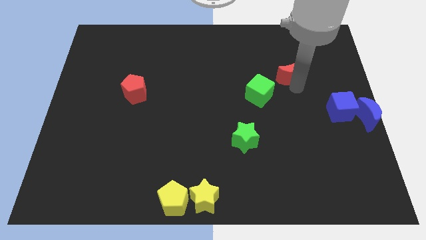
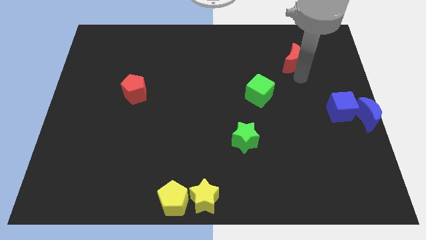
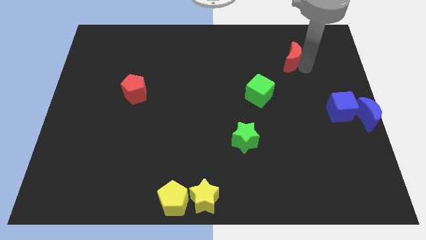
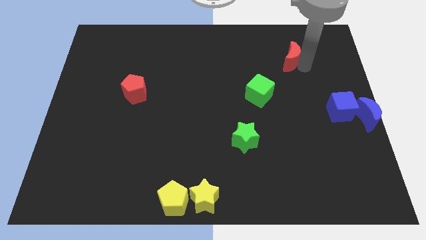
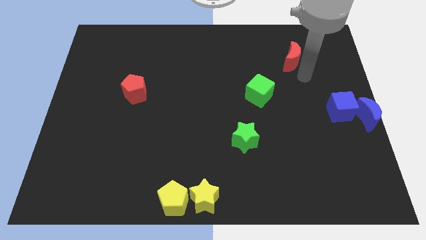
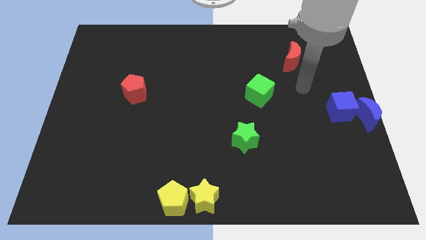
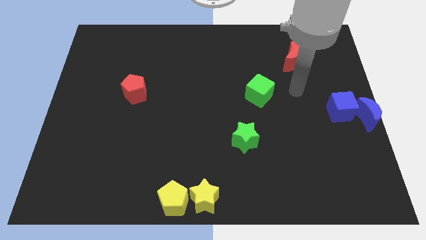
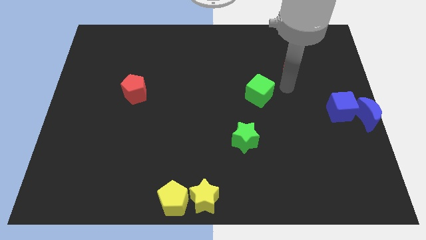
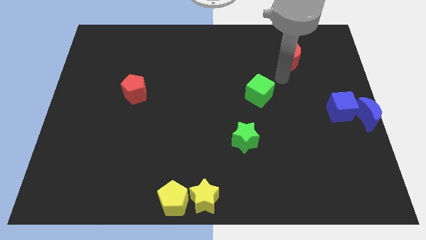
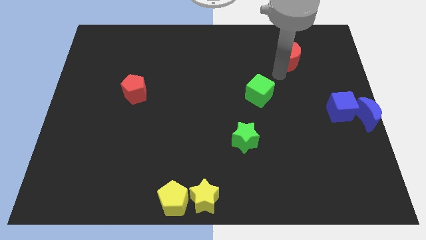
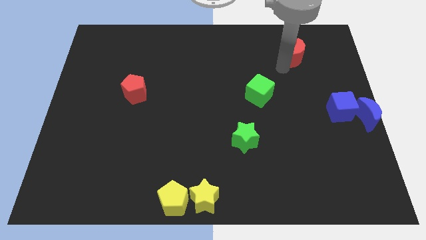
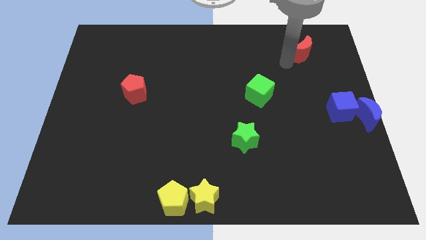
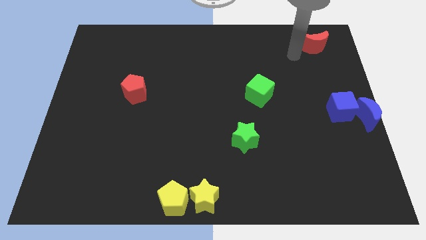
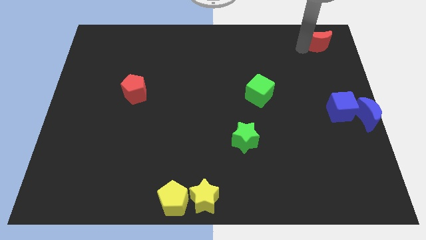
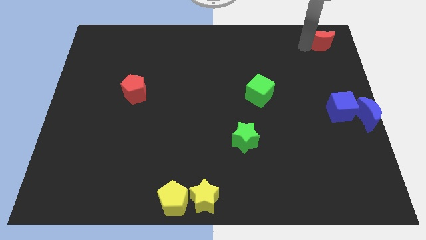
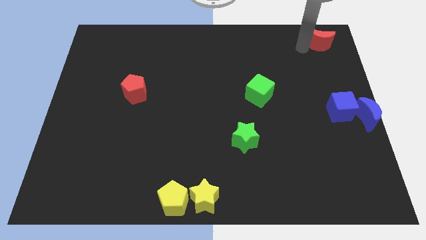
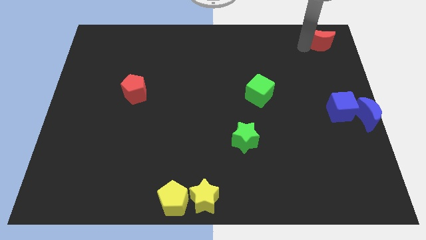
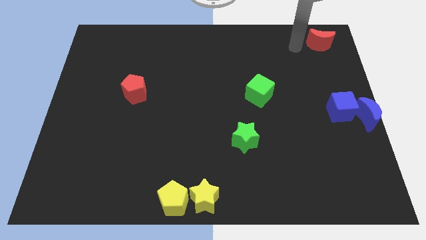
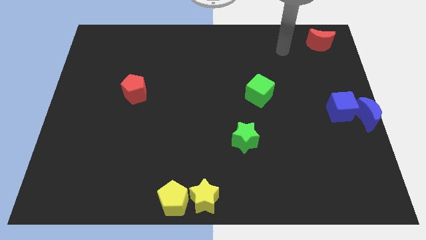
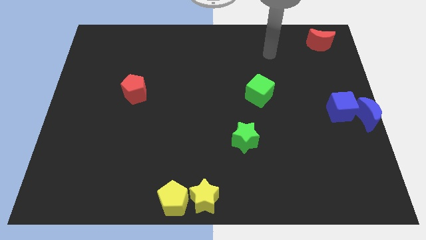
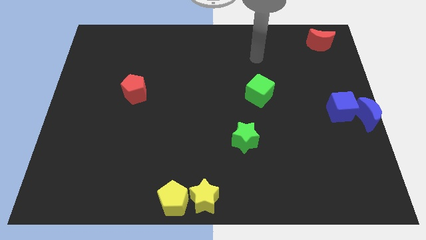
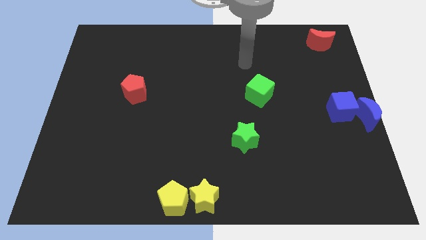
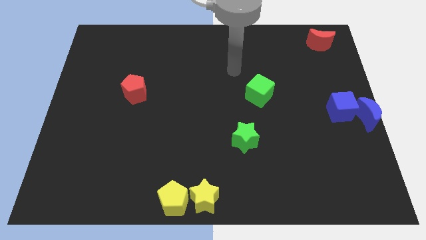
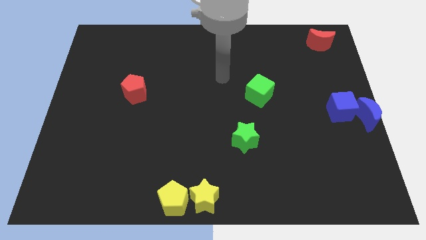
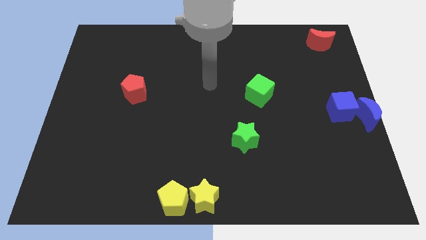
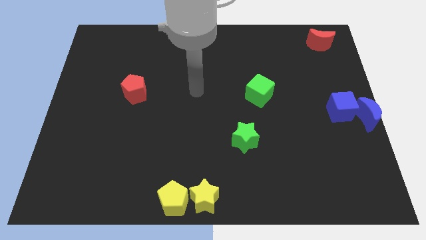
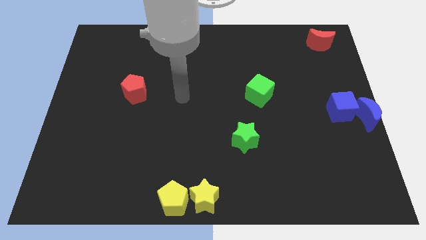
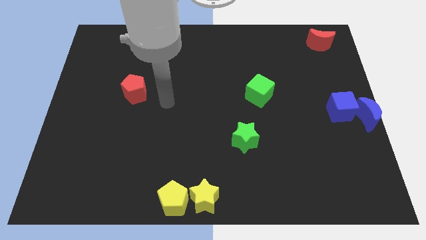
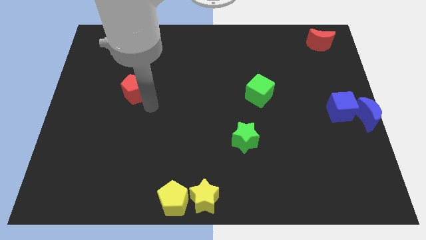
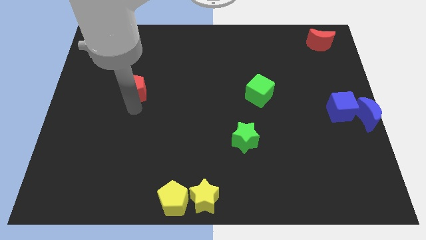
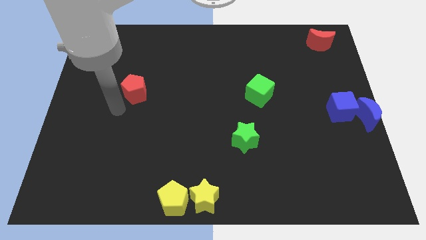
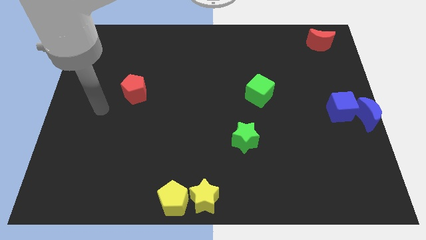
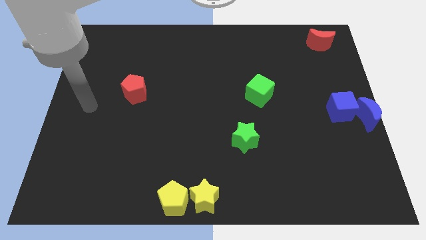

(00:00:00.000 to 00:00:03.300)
push the red crescent to the top right corner

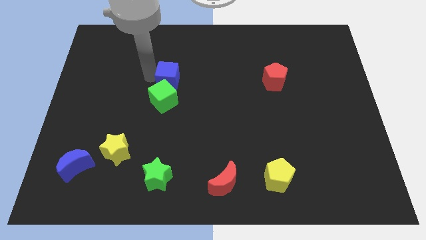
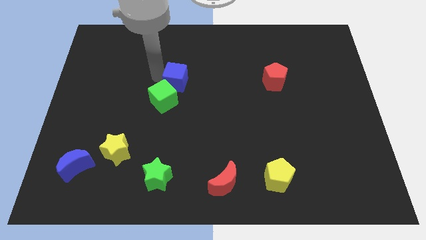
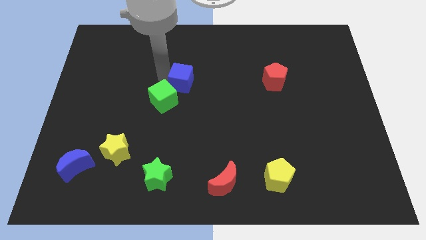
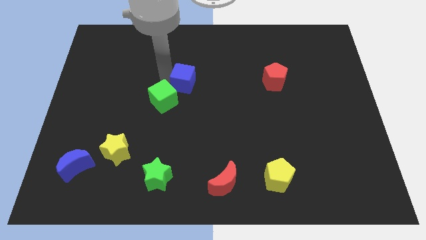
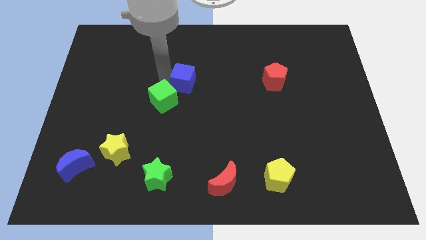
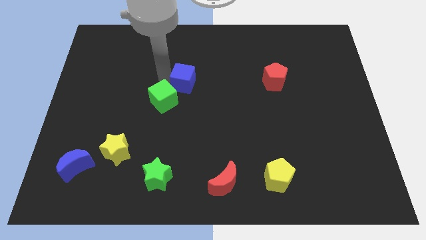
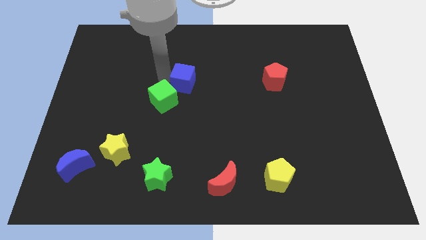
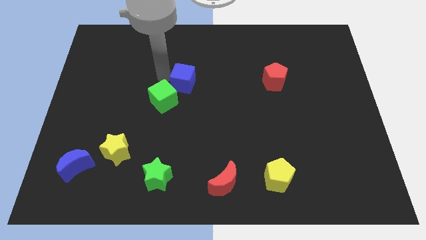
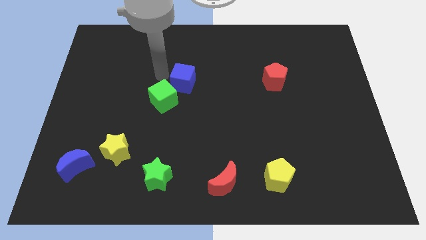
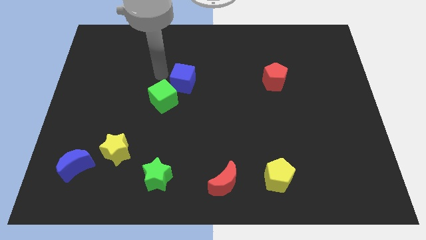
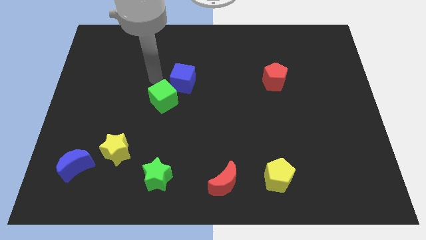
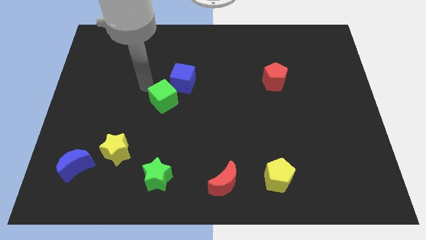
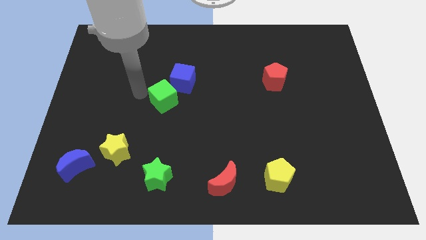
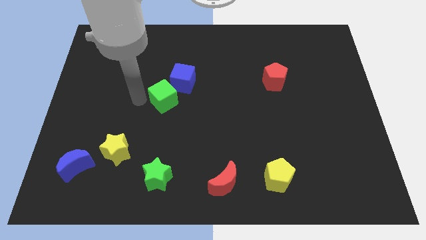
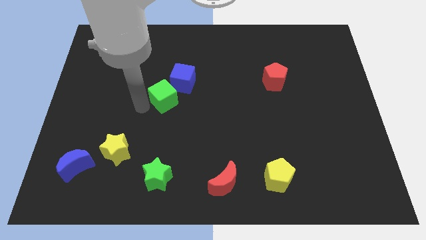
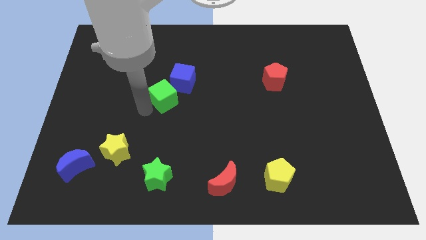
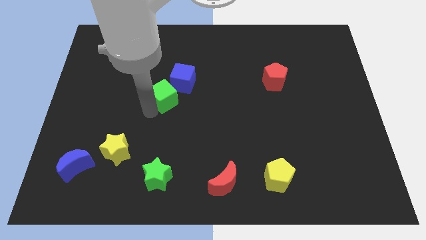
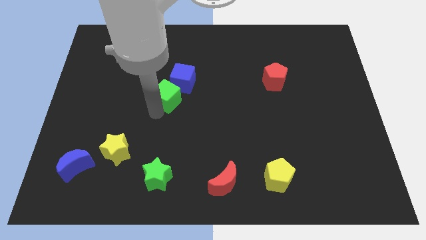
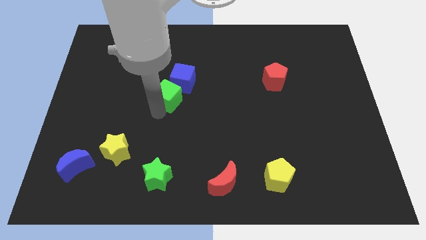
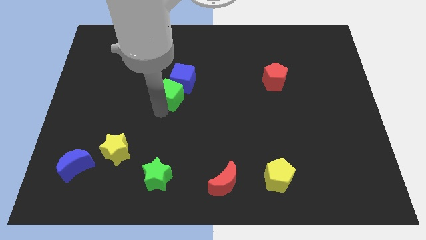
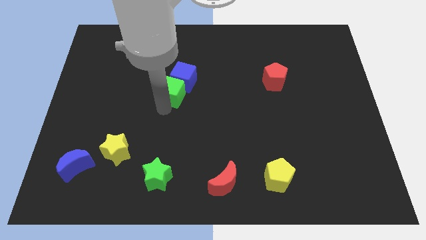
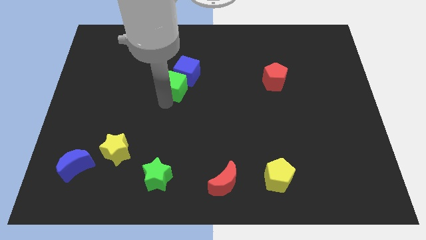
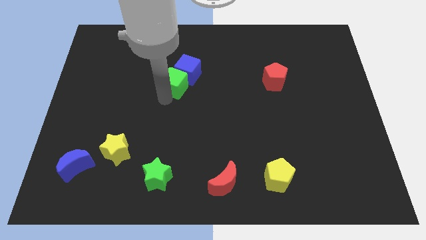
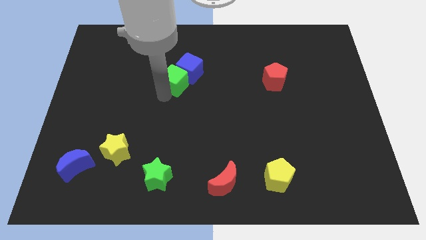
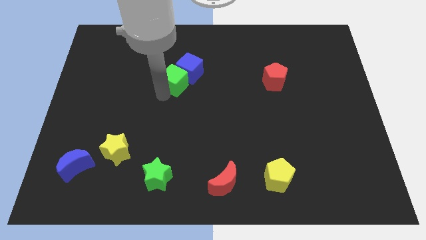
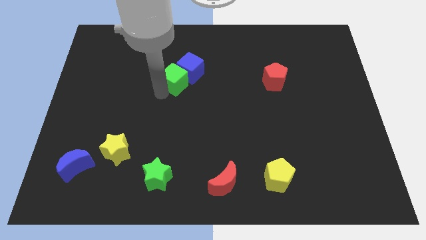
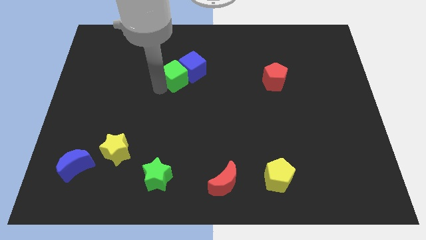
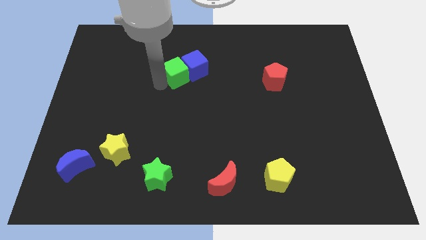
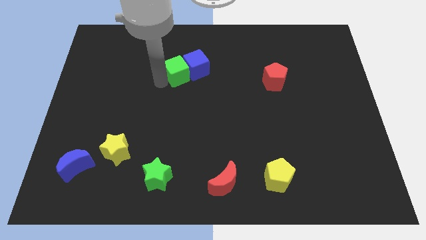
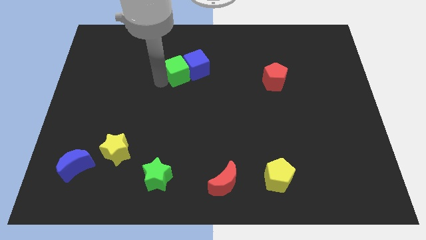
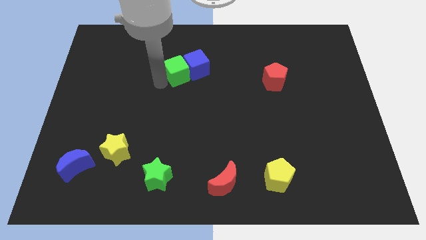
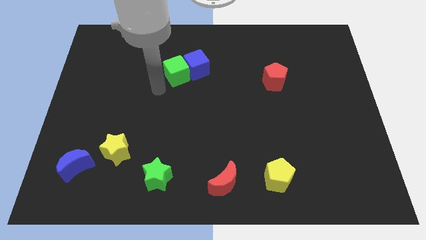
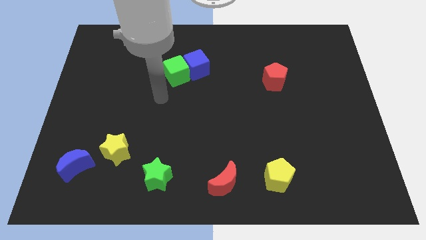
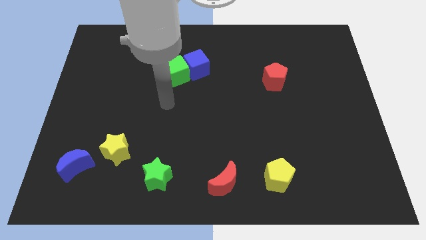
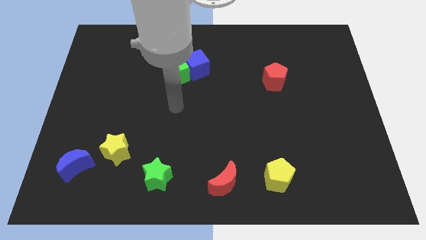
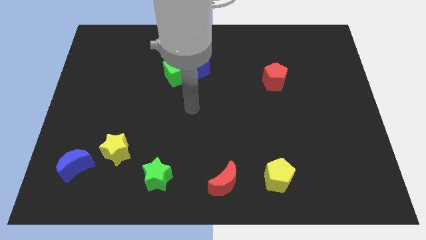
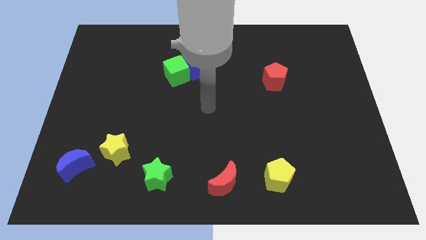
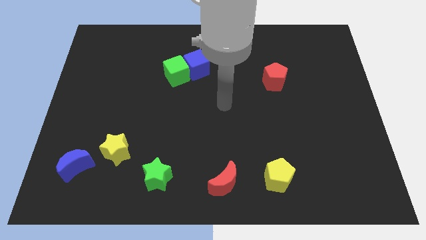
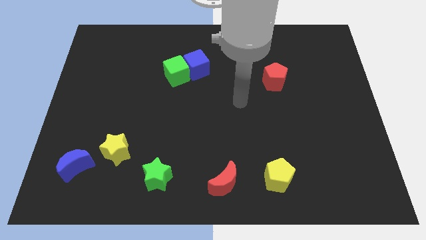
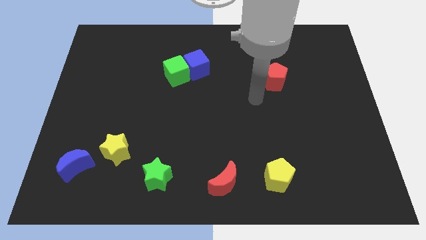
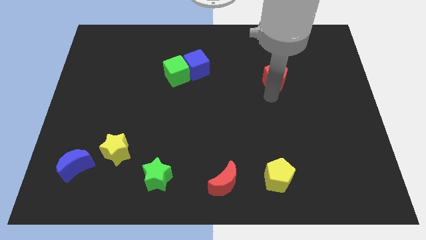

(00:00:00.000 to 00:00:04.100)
move both the cube horizontally to the left side of the red pentagon

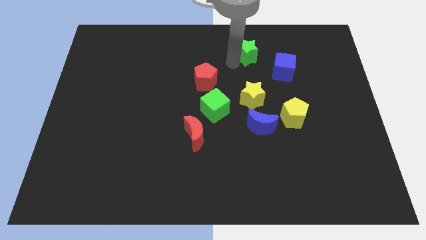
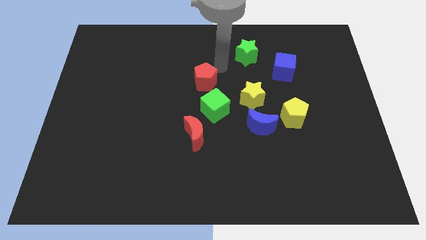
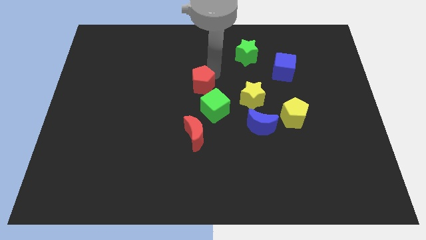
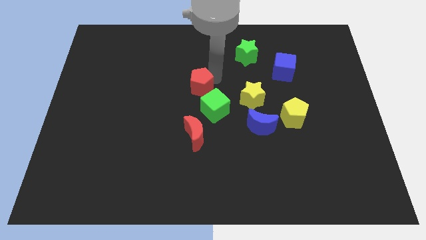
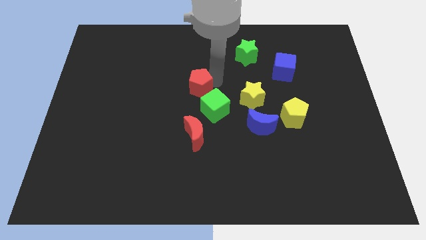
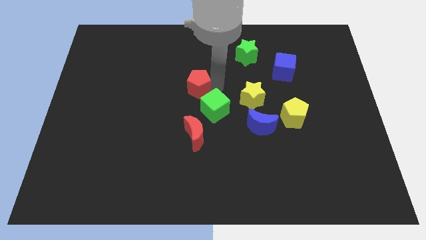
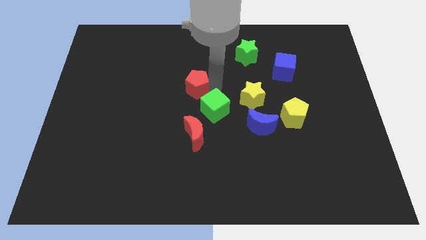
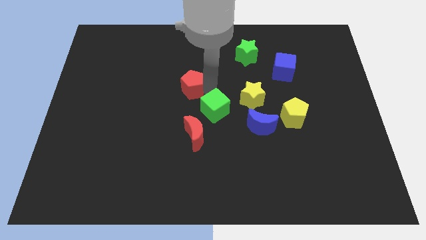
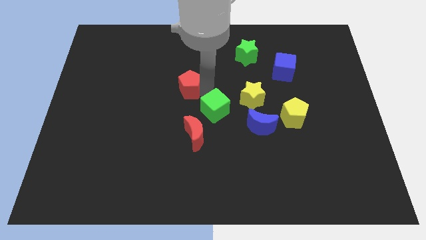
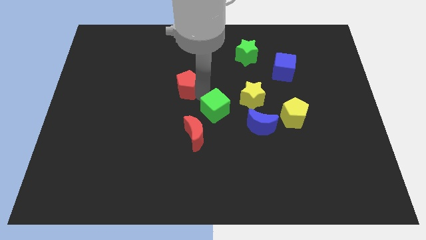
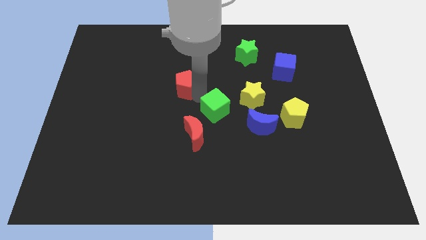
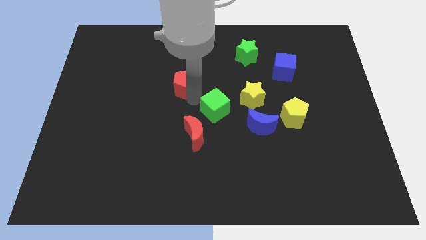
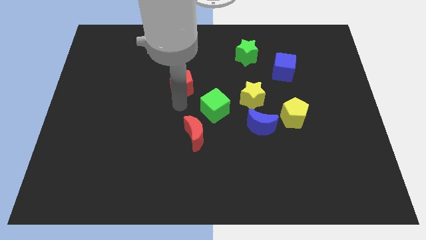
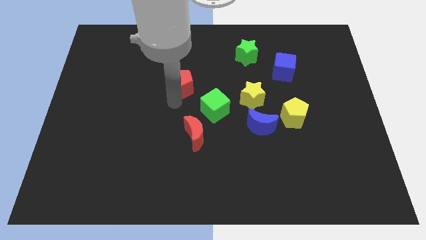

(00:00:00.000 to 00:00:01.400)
push the red pentagon to the top left side of the green cube

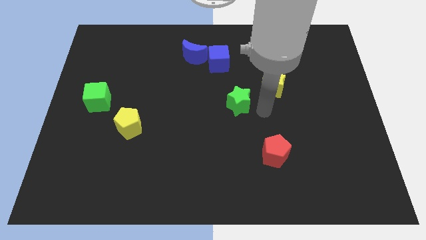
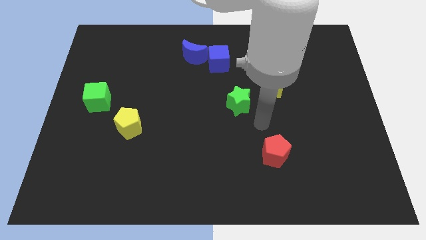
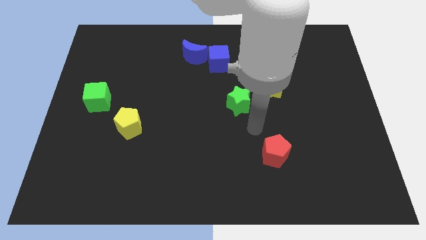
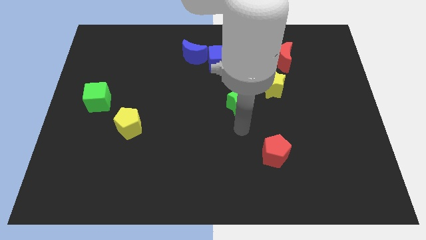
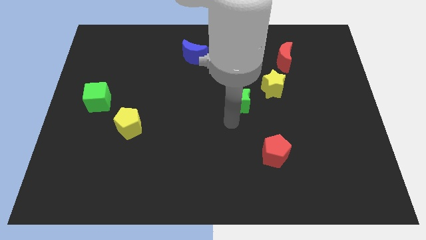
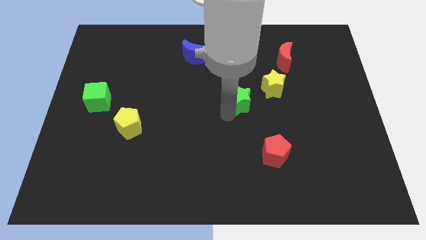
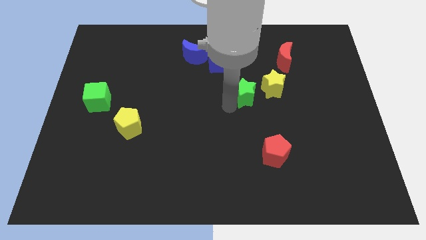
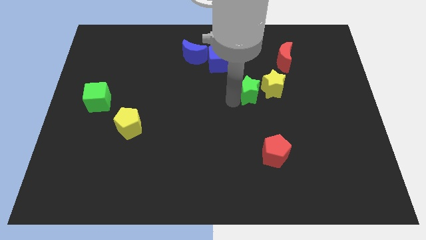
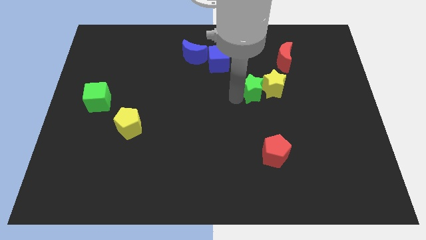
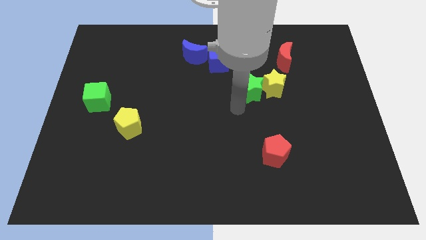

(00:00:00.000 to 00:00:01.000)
push the green star to the left of the yellow star
